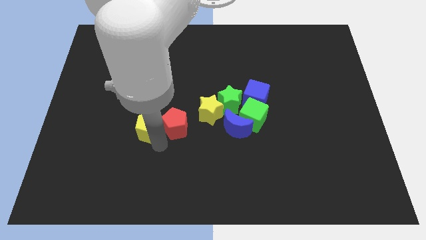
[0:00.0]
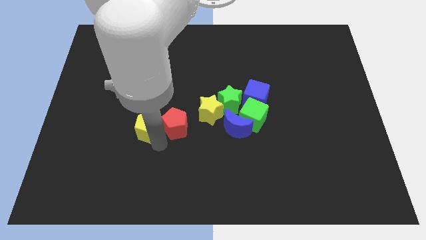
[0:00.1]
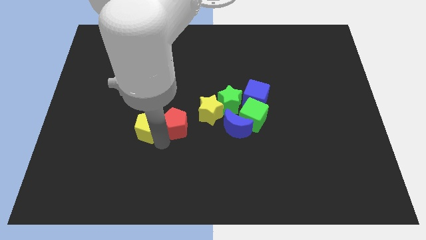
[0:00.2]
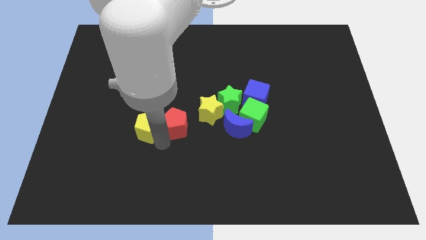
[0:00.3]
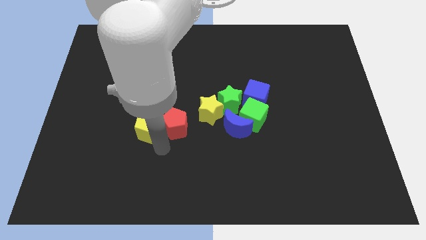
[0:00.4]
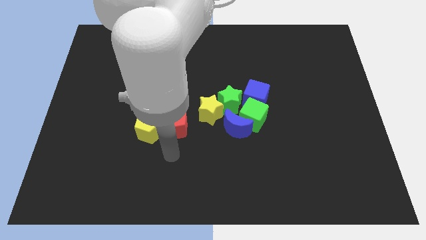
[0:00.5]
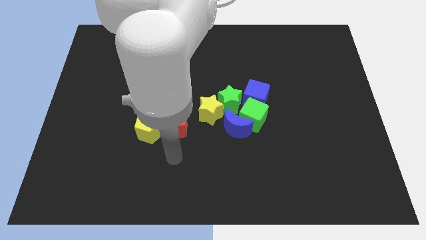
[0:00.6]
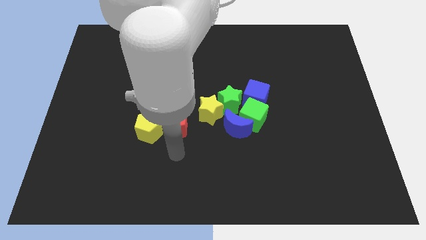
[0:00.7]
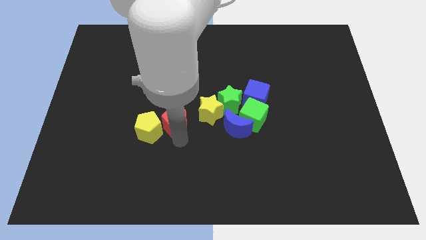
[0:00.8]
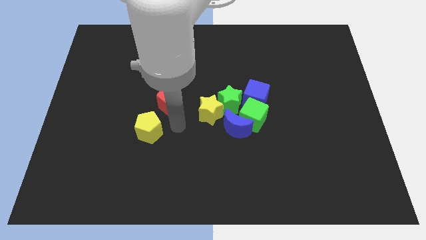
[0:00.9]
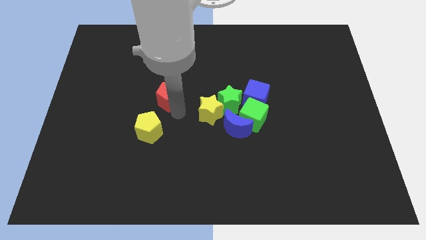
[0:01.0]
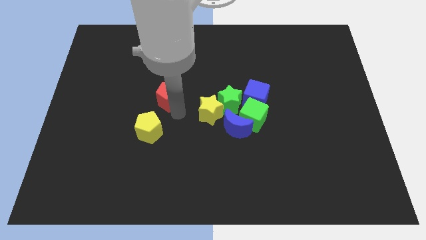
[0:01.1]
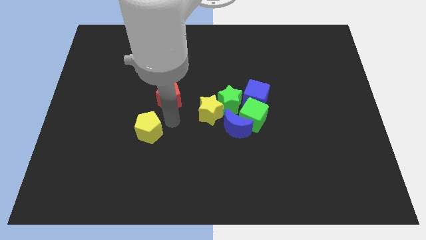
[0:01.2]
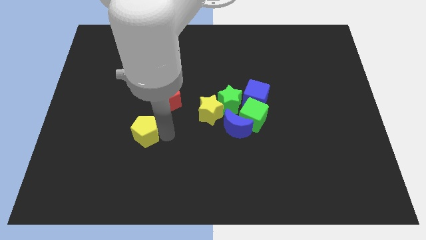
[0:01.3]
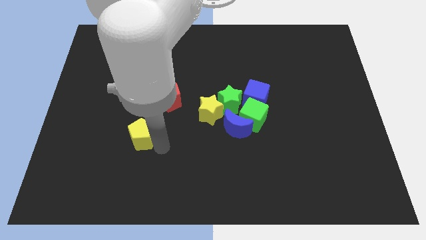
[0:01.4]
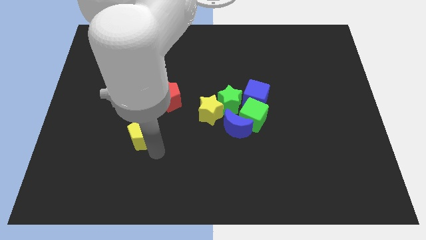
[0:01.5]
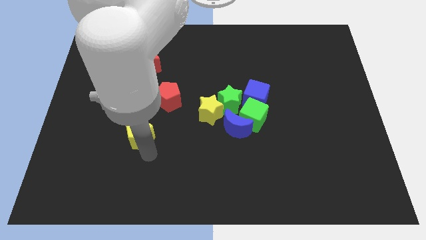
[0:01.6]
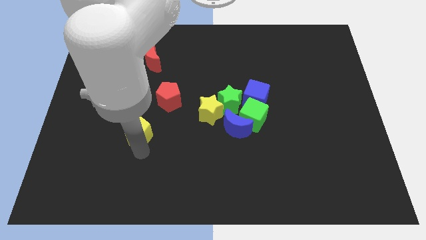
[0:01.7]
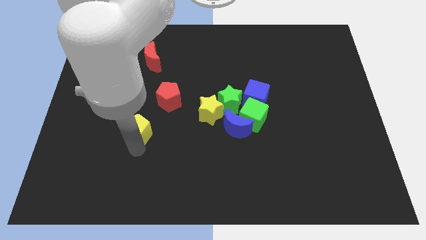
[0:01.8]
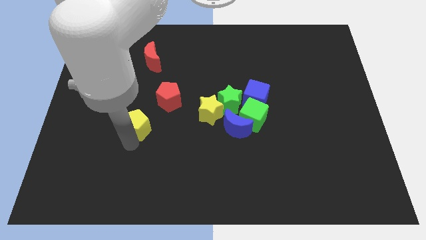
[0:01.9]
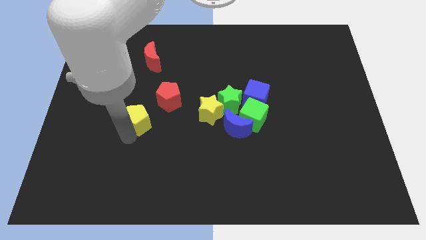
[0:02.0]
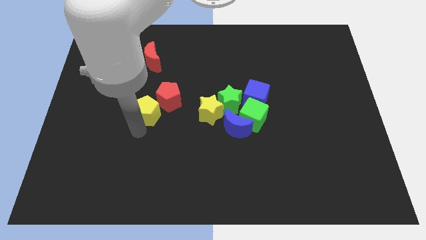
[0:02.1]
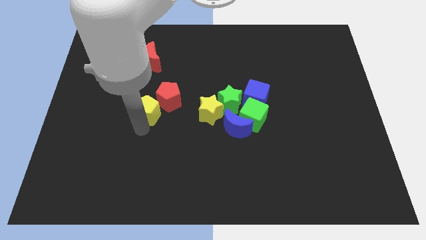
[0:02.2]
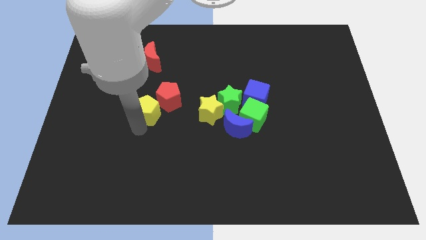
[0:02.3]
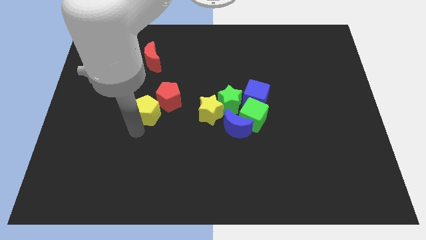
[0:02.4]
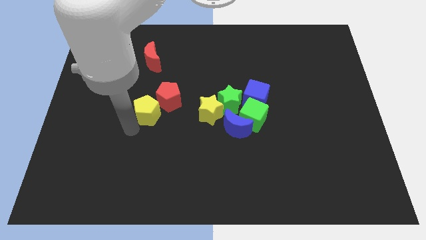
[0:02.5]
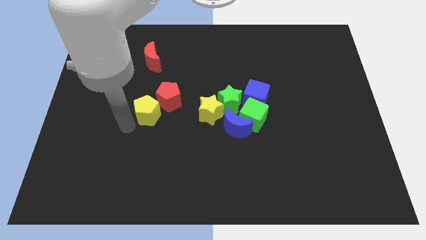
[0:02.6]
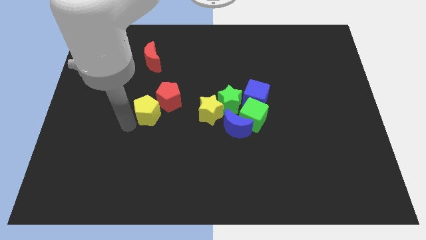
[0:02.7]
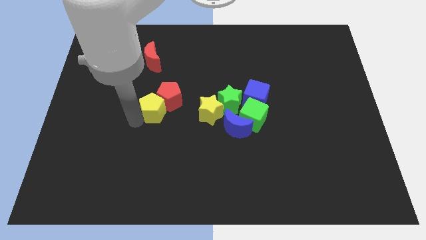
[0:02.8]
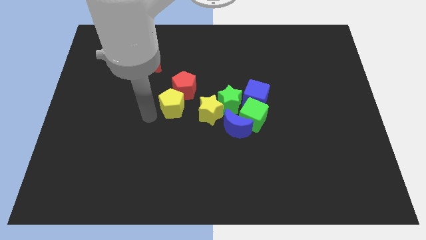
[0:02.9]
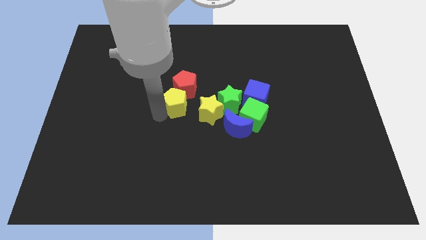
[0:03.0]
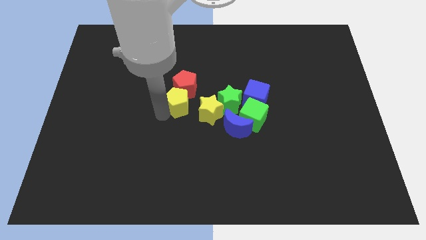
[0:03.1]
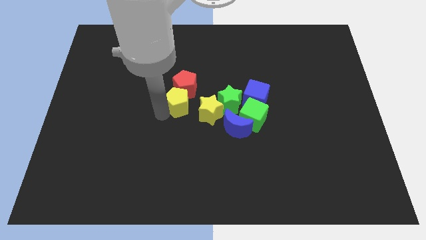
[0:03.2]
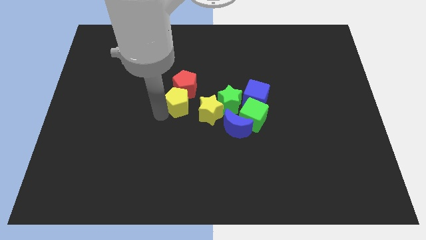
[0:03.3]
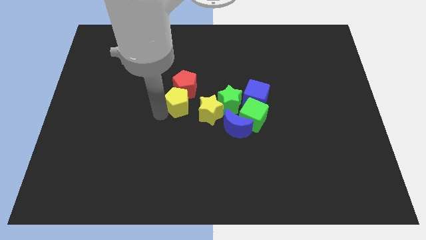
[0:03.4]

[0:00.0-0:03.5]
place the red pentagon at the top of the yellow pentagon

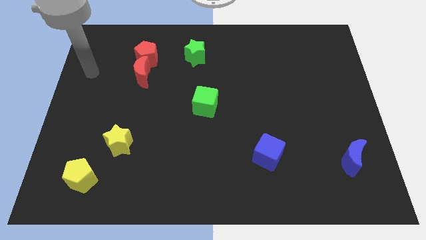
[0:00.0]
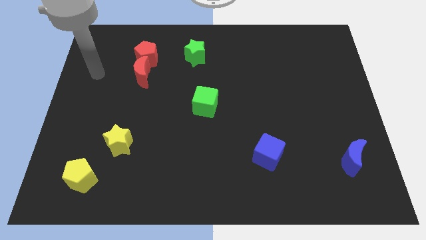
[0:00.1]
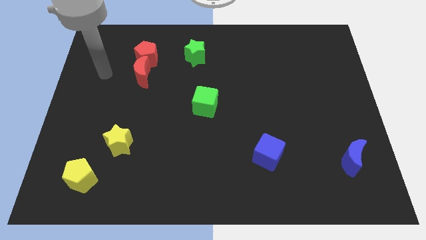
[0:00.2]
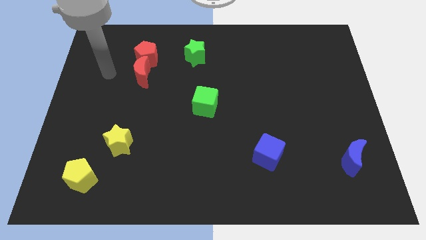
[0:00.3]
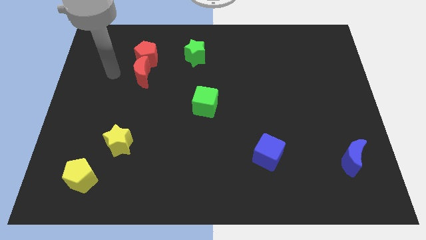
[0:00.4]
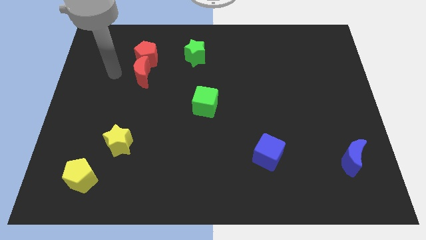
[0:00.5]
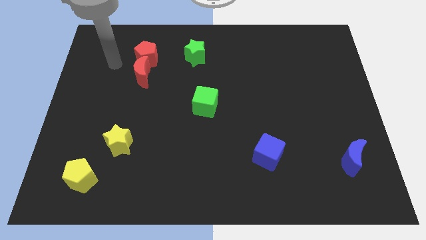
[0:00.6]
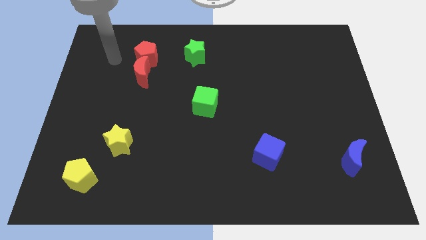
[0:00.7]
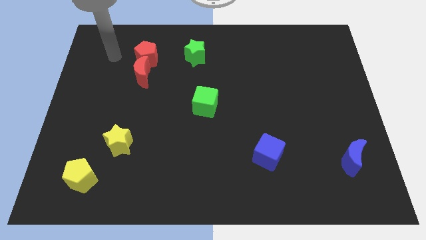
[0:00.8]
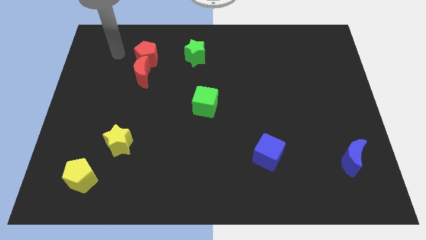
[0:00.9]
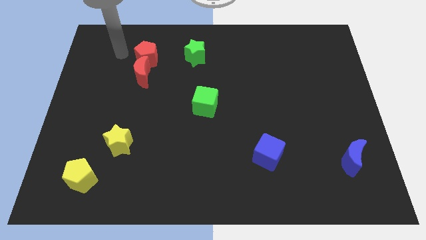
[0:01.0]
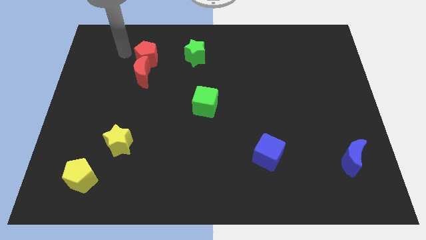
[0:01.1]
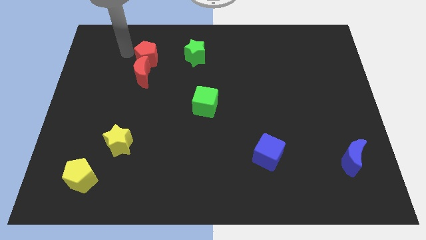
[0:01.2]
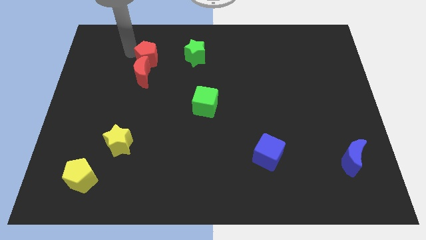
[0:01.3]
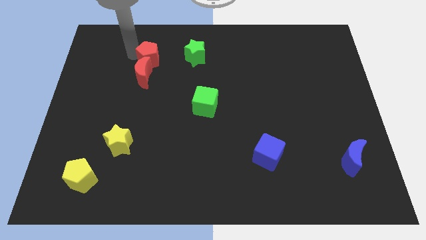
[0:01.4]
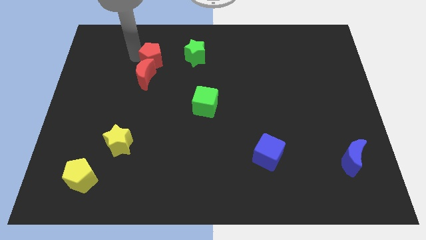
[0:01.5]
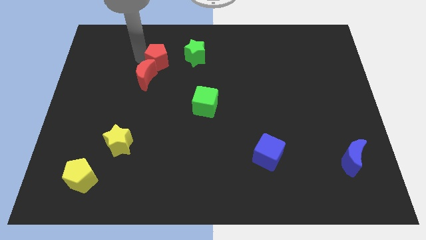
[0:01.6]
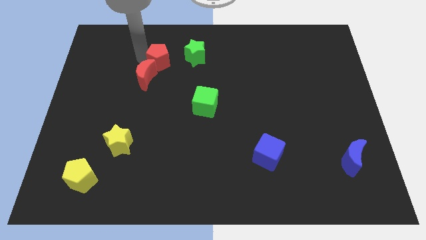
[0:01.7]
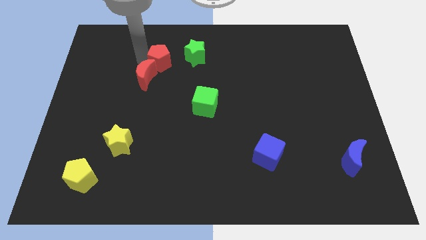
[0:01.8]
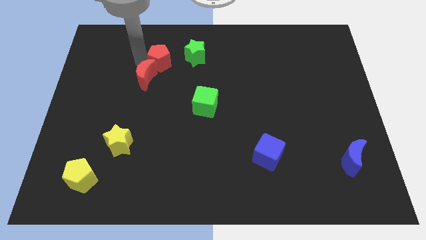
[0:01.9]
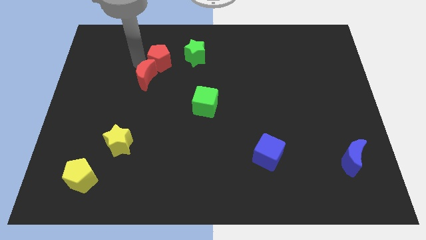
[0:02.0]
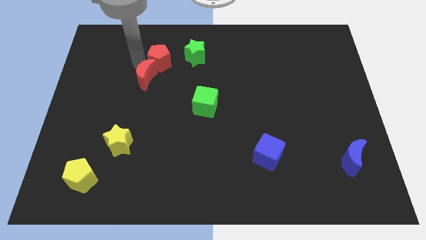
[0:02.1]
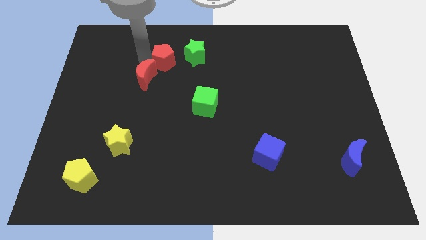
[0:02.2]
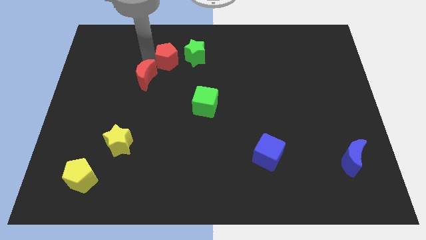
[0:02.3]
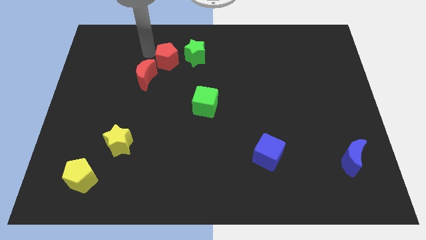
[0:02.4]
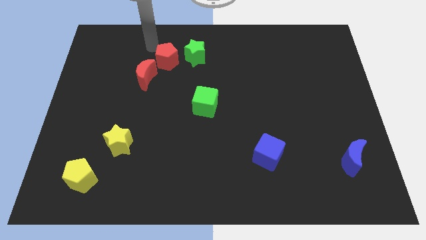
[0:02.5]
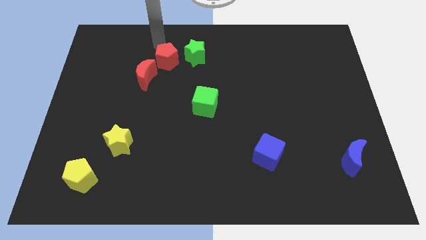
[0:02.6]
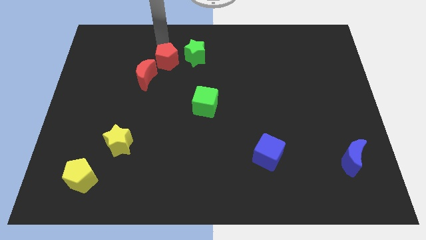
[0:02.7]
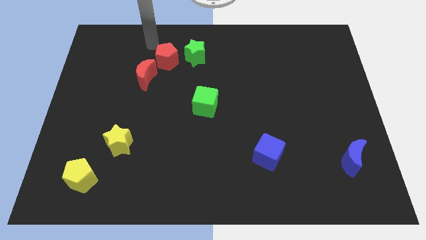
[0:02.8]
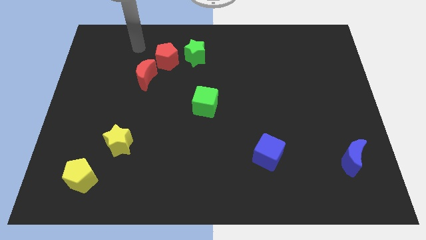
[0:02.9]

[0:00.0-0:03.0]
slightly push the red pentagon to the left of green star

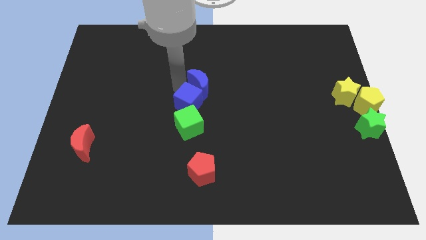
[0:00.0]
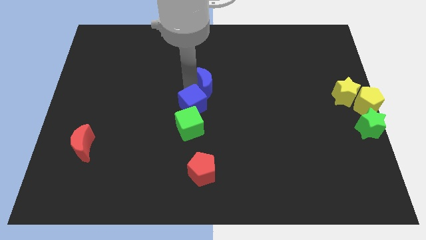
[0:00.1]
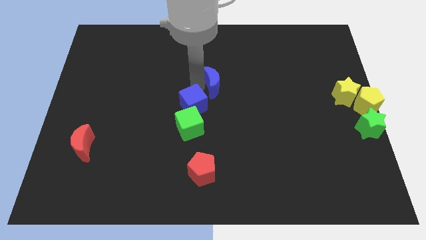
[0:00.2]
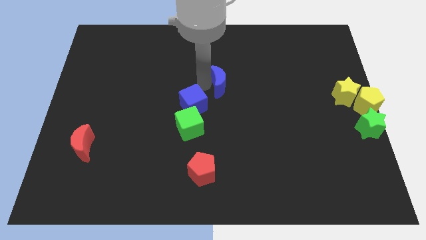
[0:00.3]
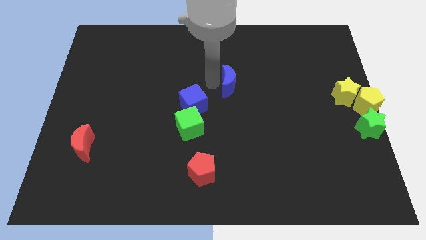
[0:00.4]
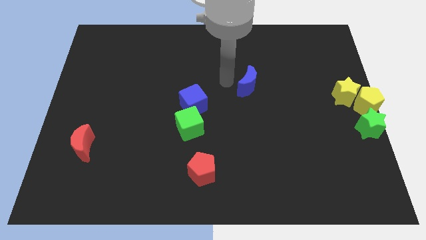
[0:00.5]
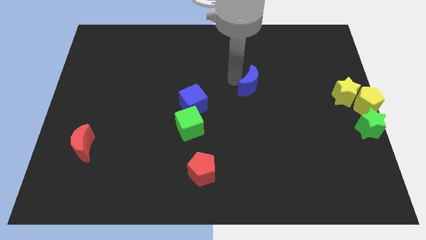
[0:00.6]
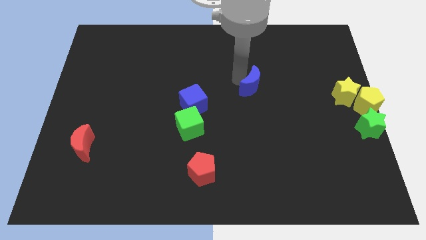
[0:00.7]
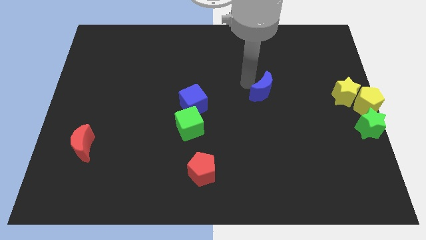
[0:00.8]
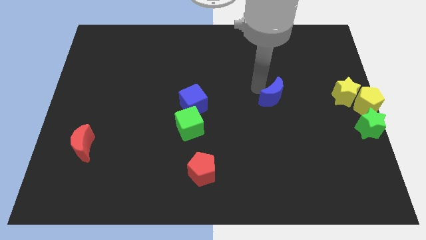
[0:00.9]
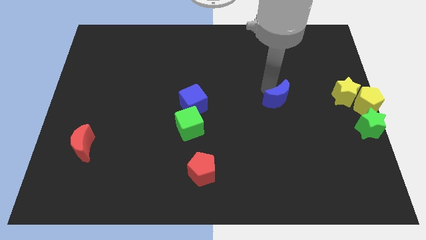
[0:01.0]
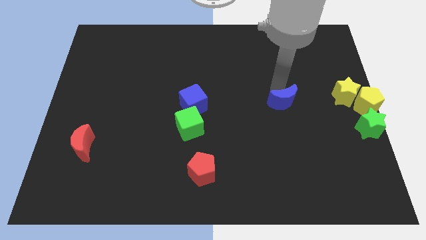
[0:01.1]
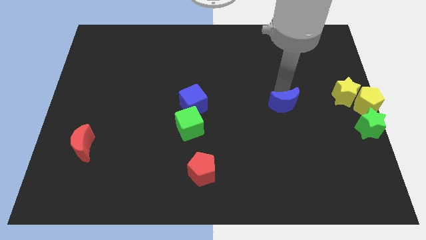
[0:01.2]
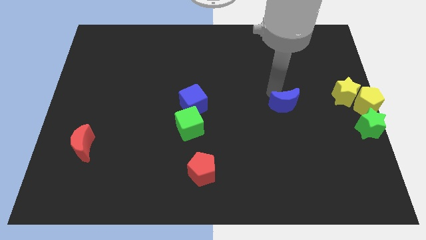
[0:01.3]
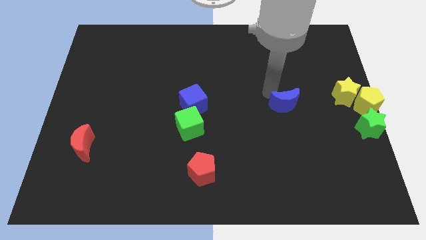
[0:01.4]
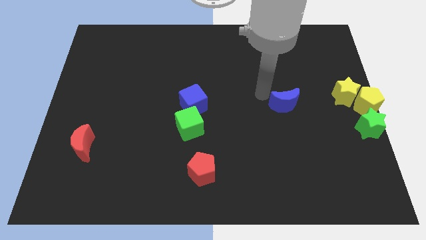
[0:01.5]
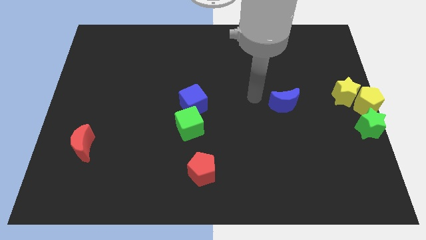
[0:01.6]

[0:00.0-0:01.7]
separate blue moon from blue cube

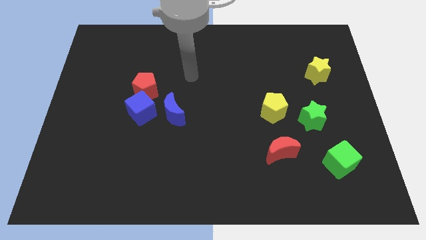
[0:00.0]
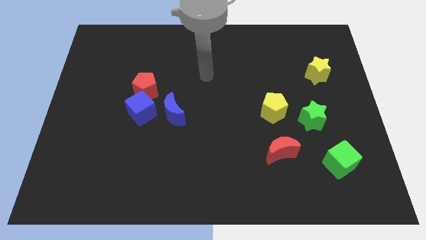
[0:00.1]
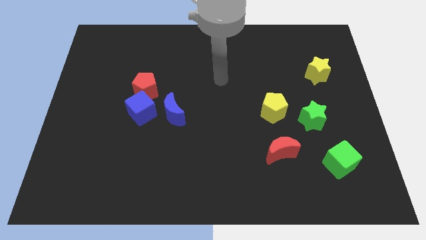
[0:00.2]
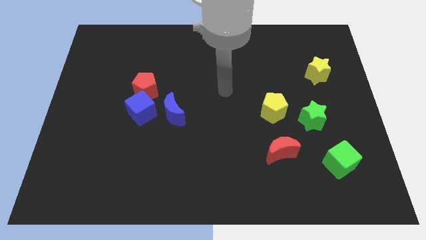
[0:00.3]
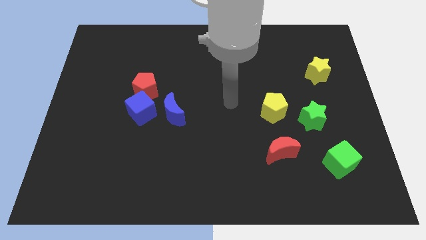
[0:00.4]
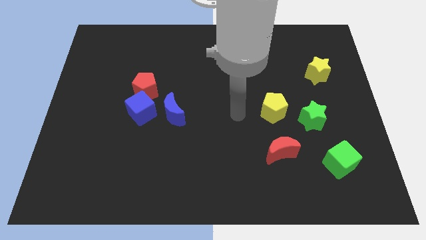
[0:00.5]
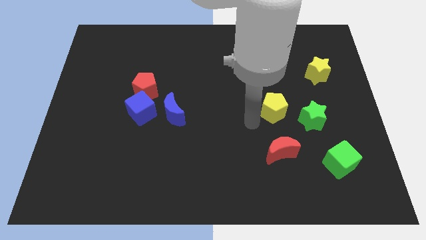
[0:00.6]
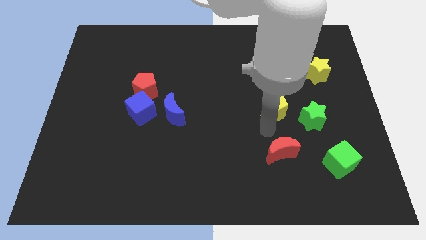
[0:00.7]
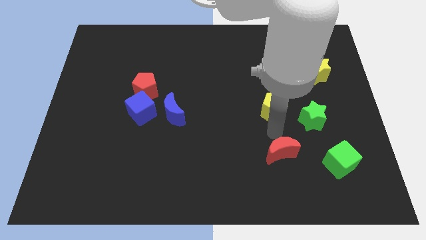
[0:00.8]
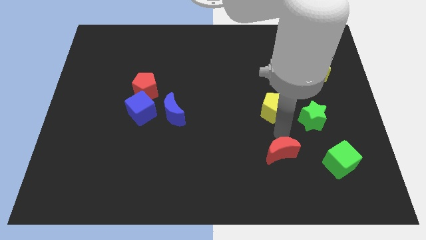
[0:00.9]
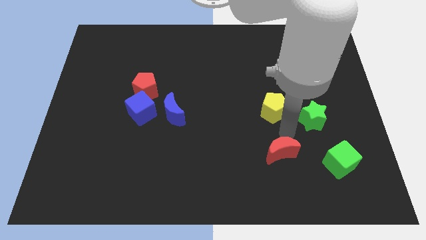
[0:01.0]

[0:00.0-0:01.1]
point your arm between yellow pentagon and red moon
